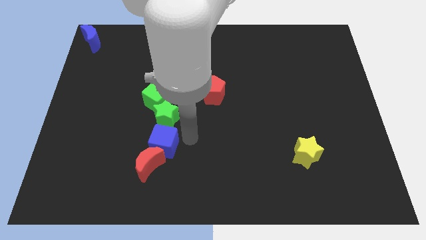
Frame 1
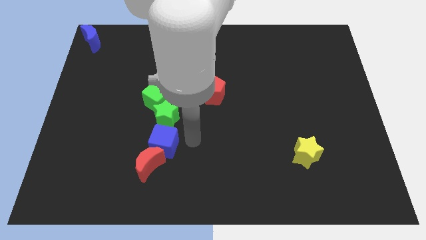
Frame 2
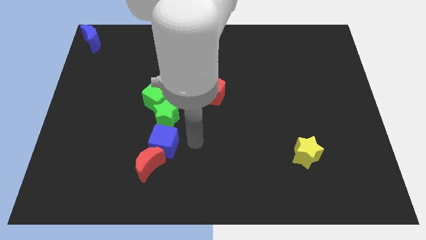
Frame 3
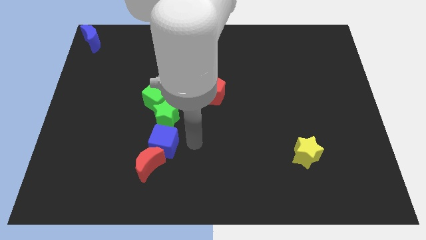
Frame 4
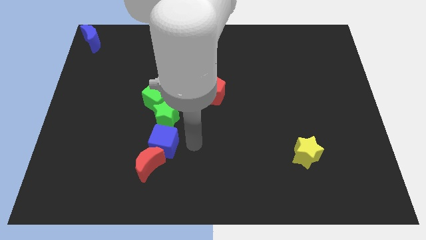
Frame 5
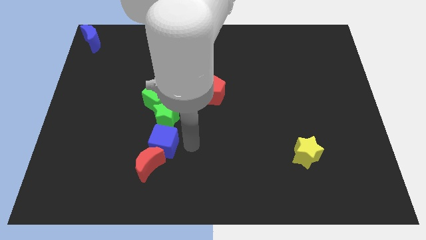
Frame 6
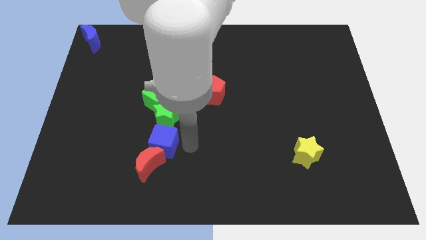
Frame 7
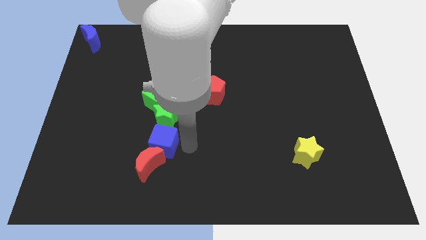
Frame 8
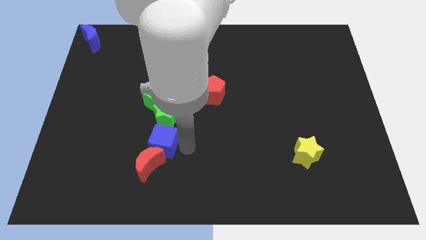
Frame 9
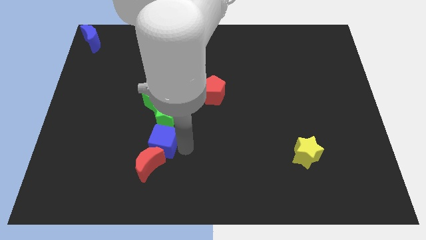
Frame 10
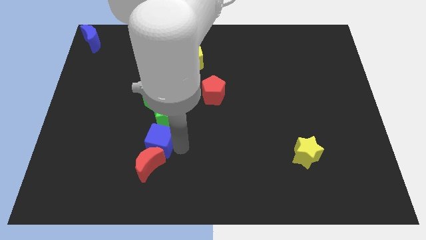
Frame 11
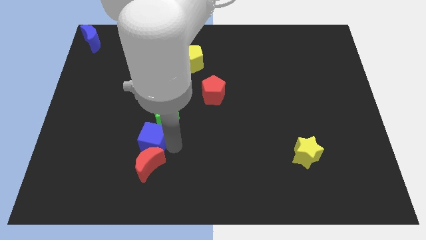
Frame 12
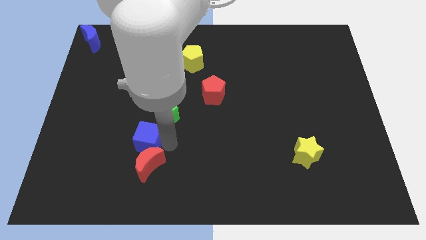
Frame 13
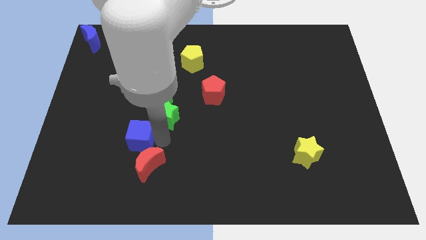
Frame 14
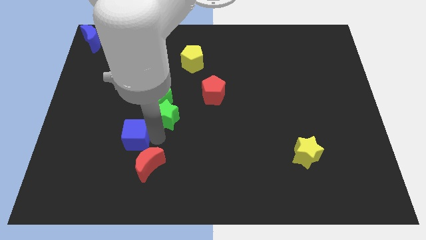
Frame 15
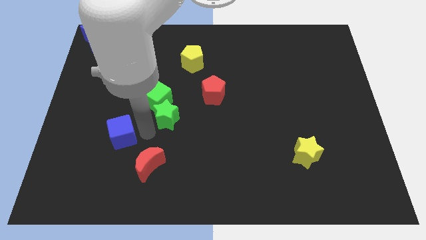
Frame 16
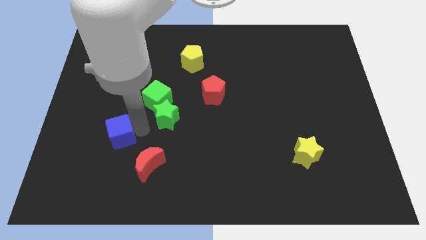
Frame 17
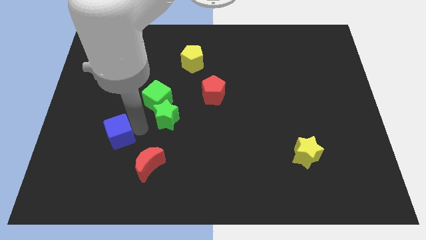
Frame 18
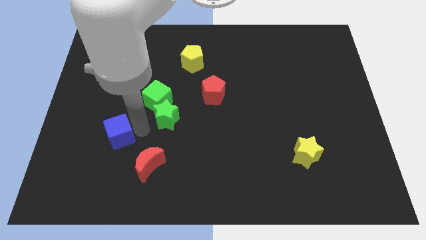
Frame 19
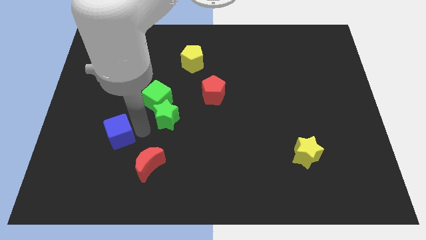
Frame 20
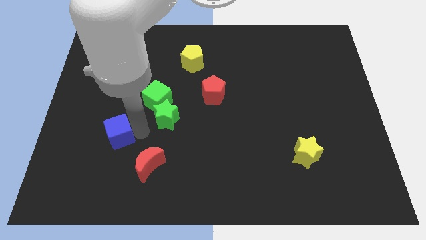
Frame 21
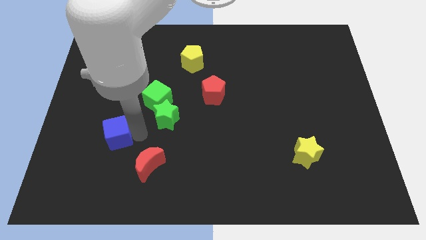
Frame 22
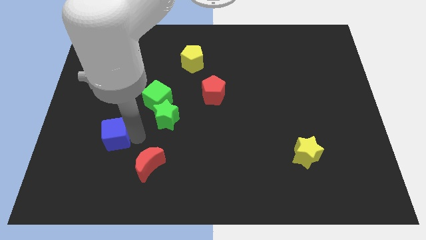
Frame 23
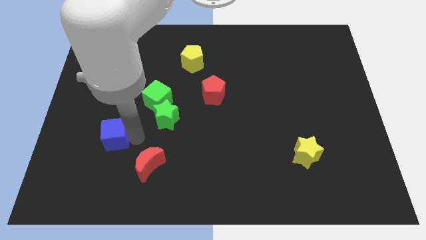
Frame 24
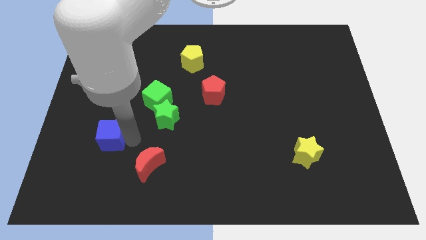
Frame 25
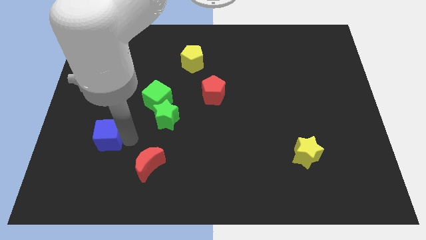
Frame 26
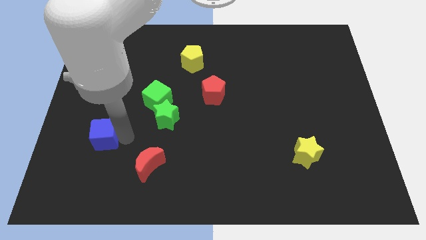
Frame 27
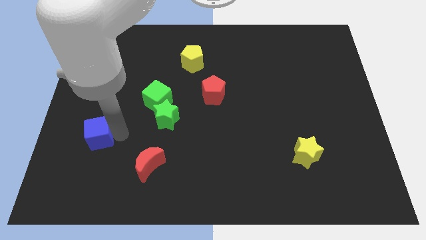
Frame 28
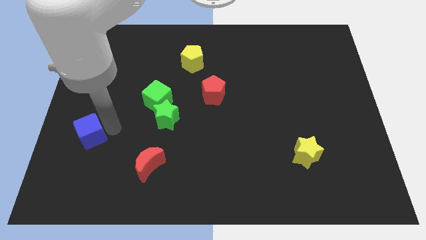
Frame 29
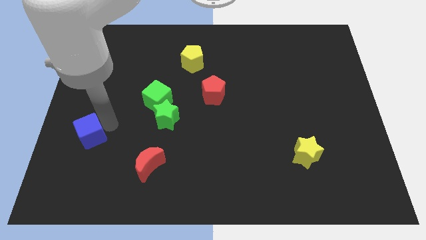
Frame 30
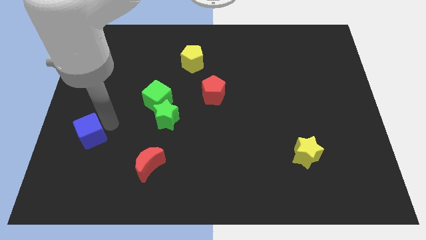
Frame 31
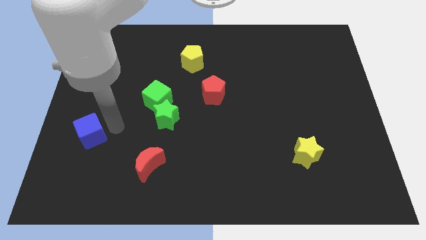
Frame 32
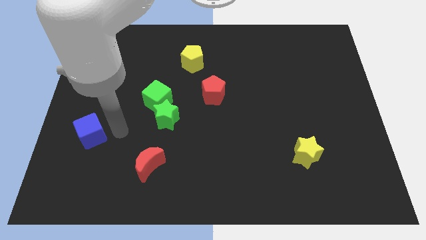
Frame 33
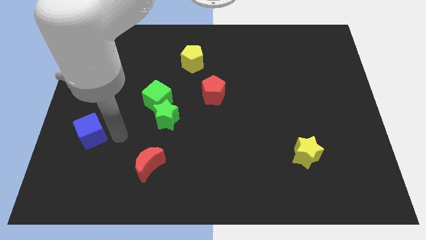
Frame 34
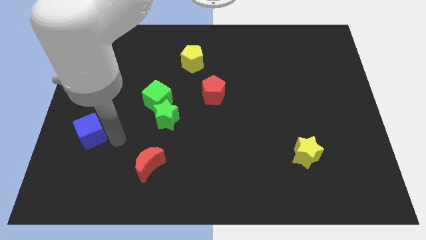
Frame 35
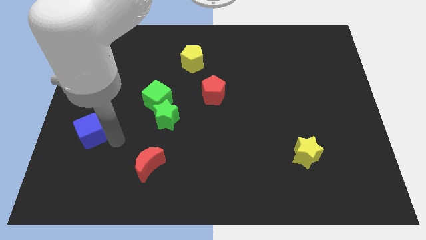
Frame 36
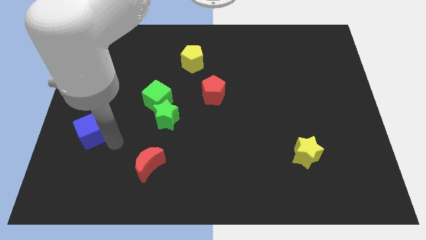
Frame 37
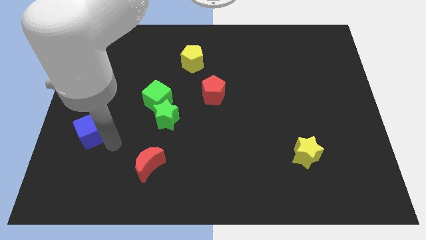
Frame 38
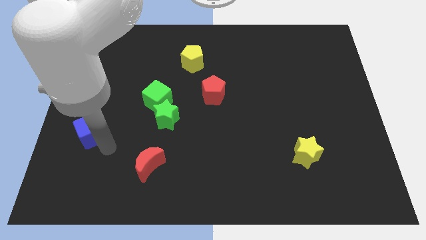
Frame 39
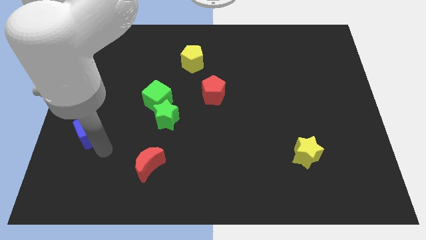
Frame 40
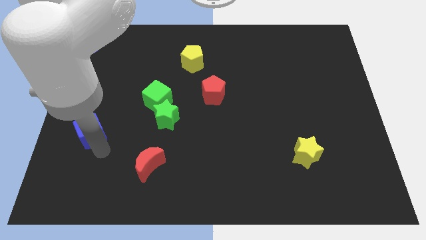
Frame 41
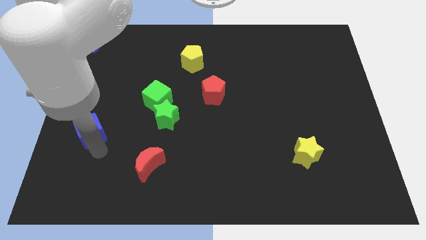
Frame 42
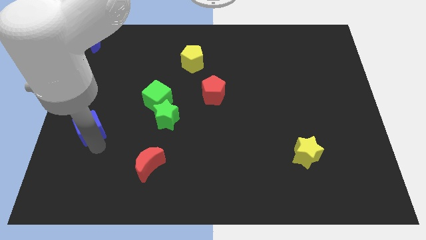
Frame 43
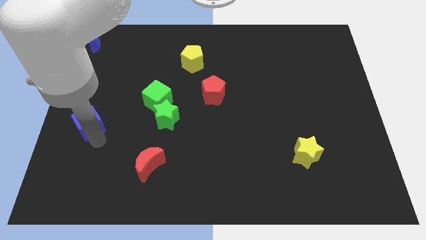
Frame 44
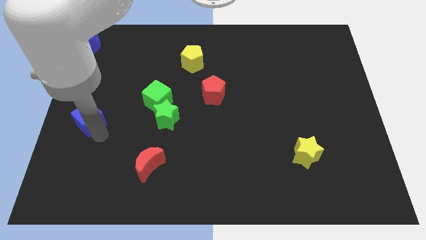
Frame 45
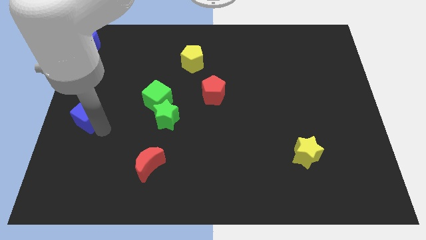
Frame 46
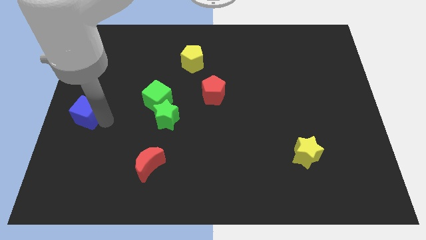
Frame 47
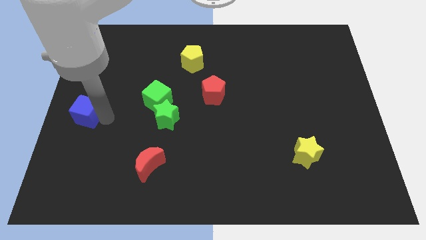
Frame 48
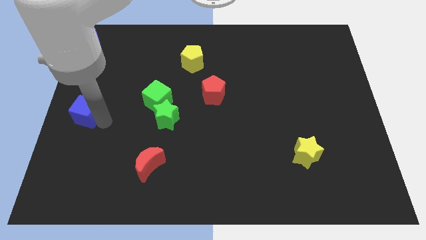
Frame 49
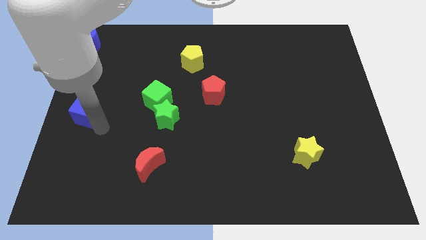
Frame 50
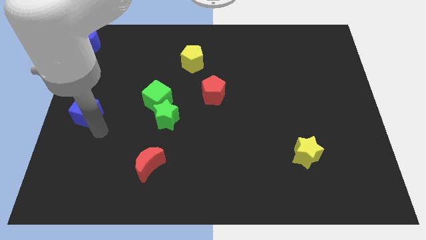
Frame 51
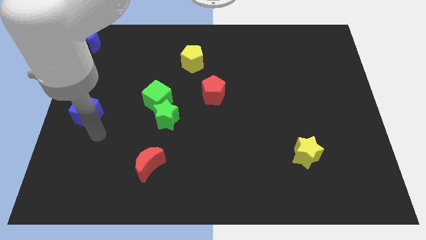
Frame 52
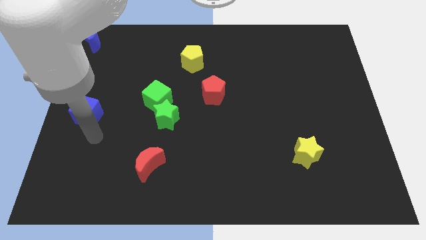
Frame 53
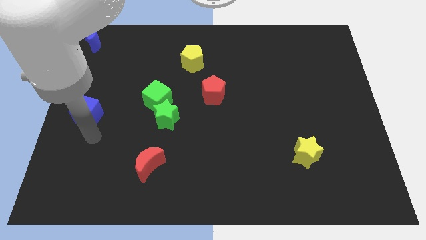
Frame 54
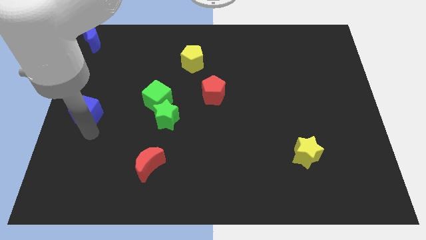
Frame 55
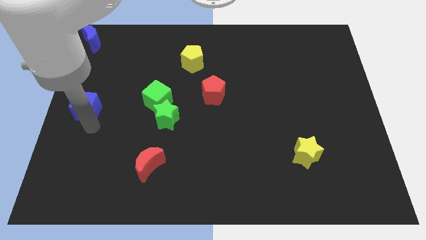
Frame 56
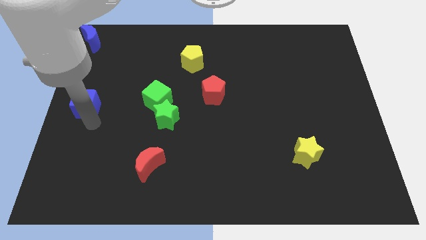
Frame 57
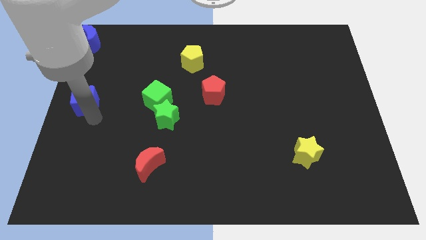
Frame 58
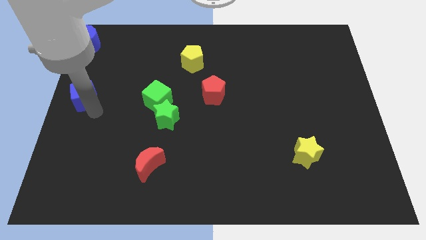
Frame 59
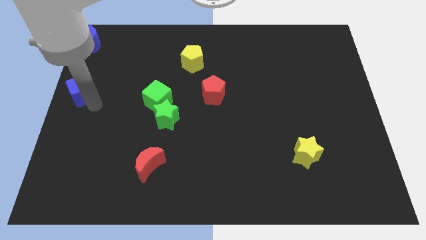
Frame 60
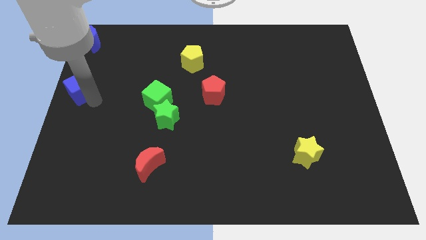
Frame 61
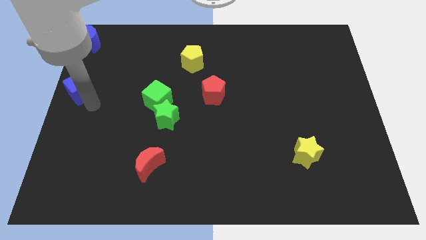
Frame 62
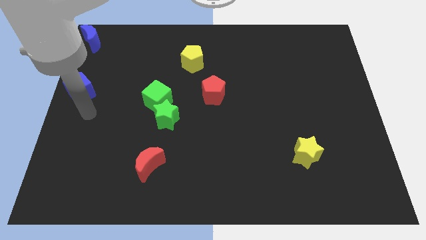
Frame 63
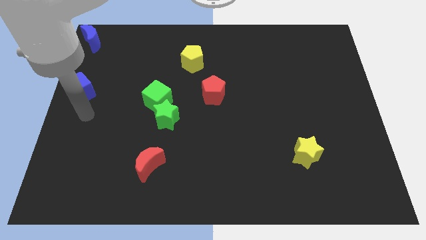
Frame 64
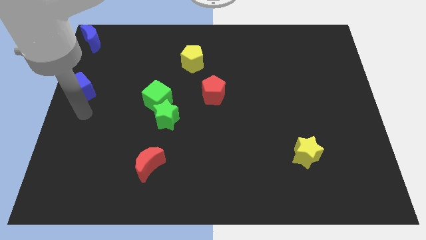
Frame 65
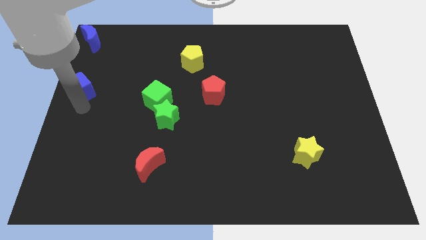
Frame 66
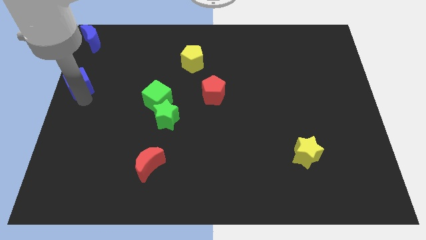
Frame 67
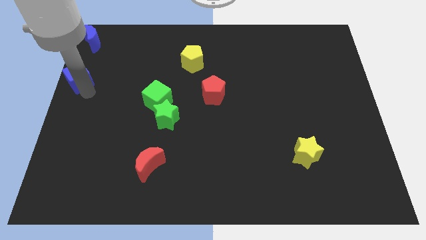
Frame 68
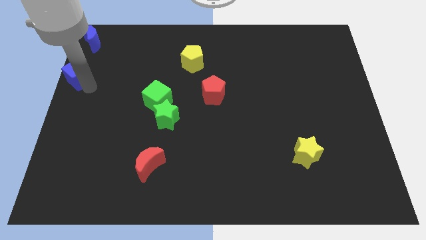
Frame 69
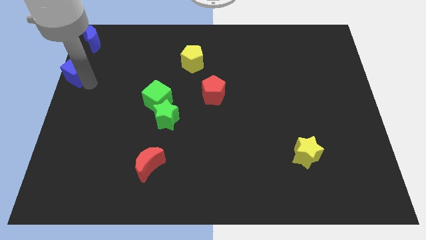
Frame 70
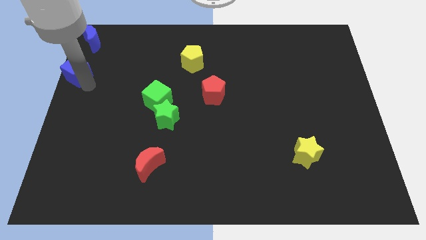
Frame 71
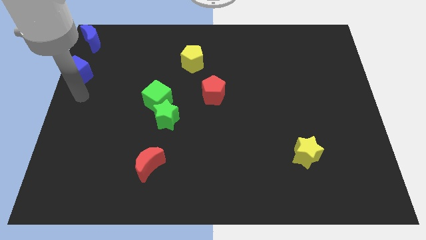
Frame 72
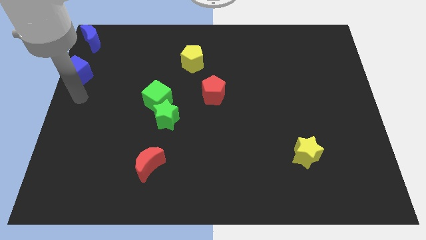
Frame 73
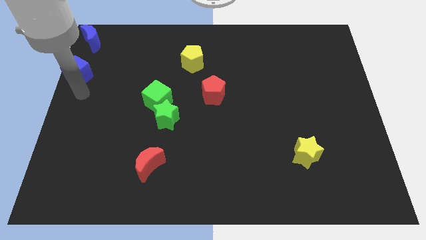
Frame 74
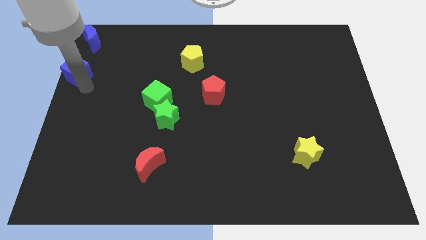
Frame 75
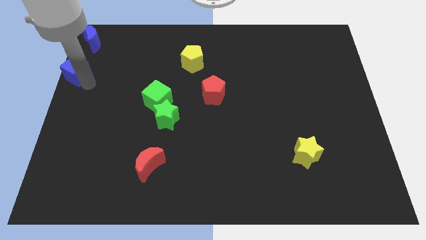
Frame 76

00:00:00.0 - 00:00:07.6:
separate blue cube from the red moon

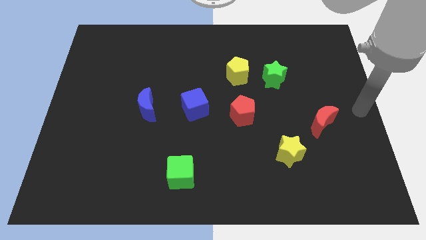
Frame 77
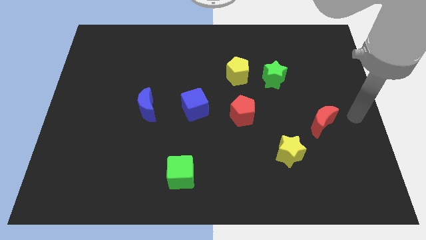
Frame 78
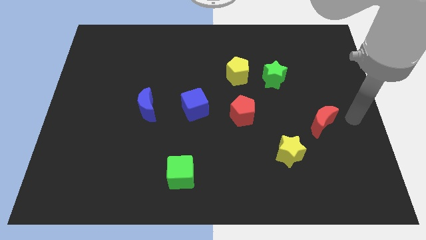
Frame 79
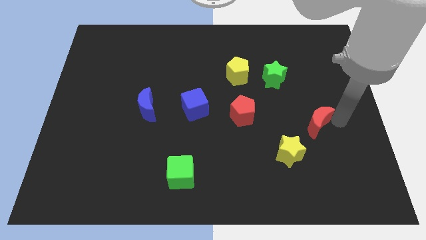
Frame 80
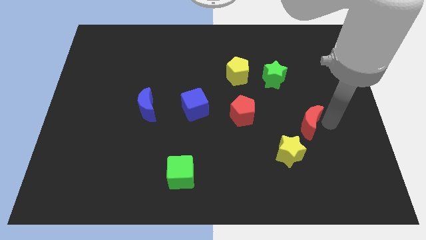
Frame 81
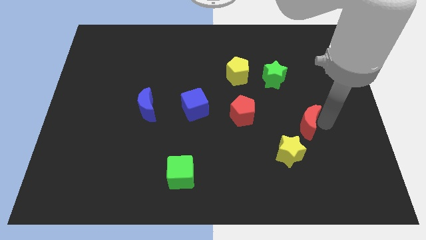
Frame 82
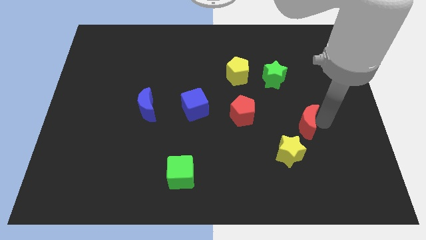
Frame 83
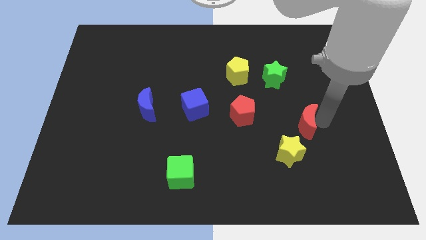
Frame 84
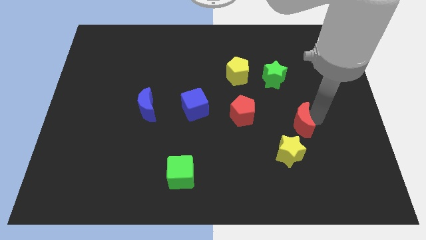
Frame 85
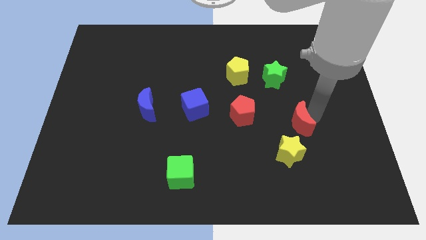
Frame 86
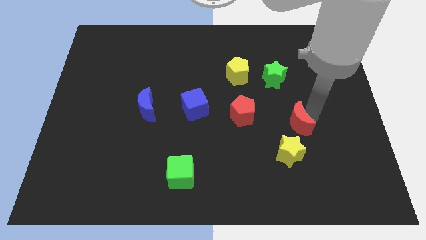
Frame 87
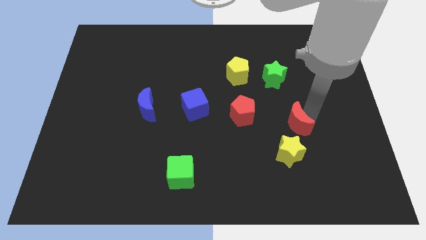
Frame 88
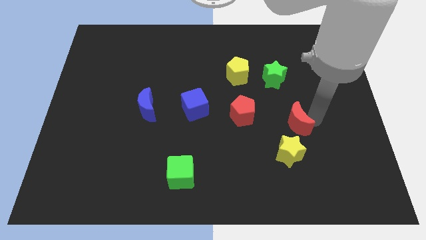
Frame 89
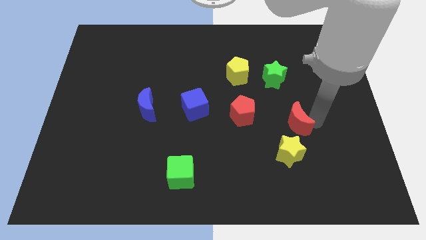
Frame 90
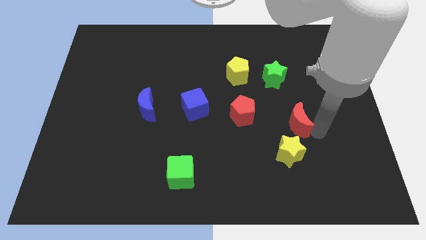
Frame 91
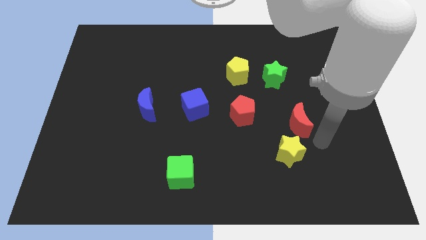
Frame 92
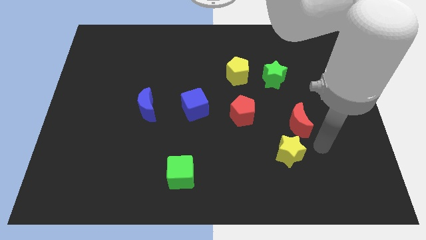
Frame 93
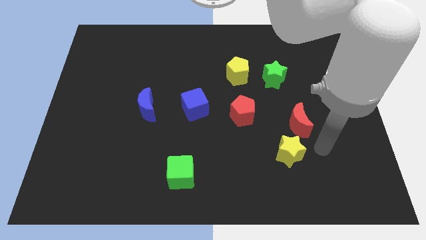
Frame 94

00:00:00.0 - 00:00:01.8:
move the red moon slightly to the left
